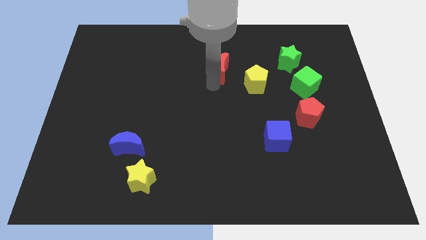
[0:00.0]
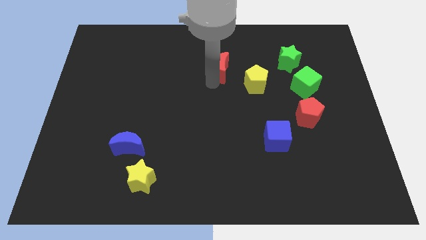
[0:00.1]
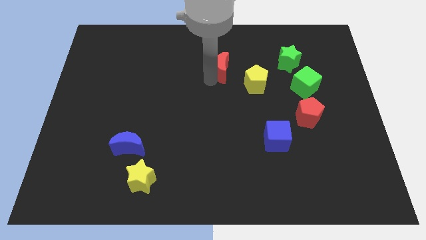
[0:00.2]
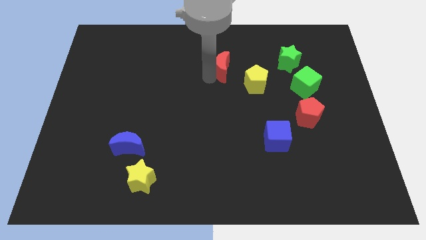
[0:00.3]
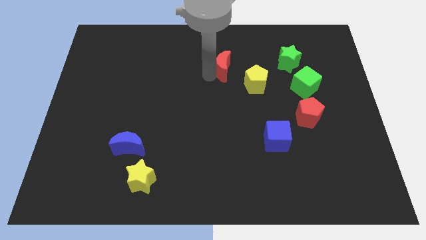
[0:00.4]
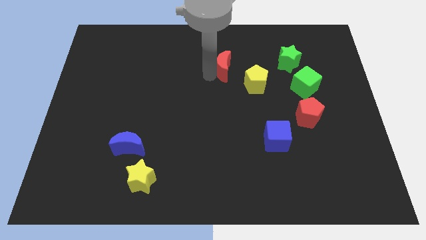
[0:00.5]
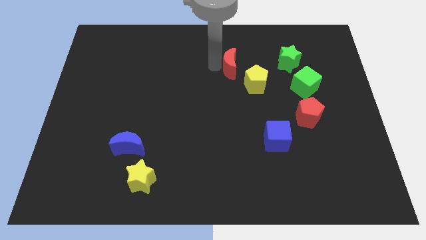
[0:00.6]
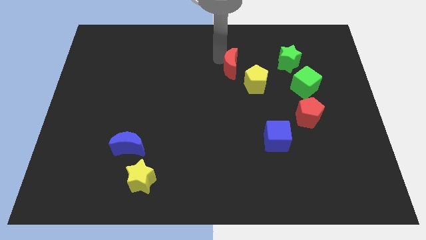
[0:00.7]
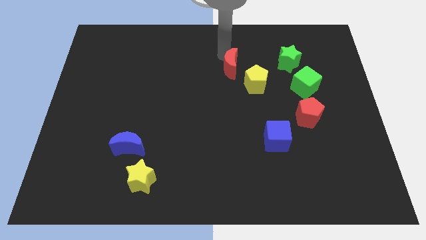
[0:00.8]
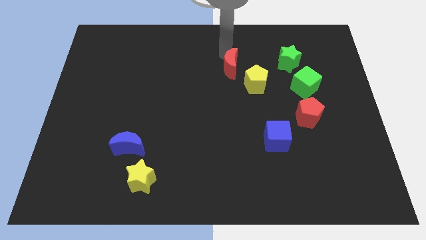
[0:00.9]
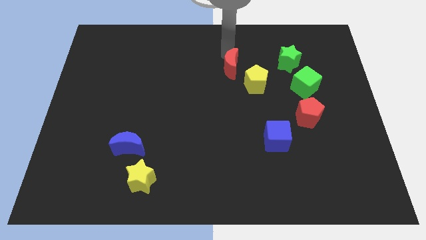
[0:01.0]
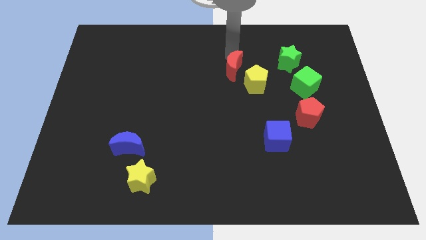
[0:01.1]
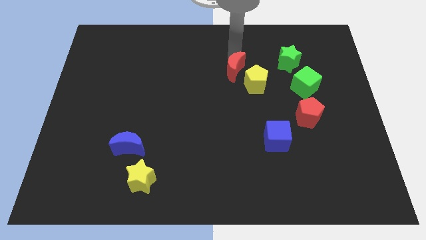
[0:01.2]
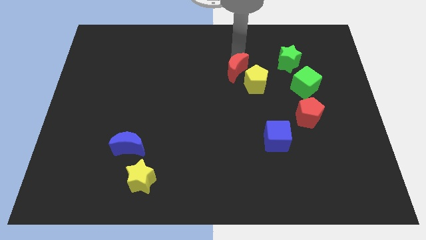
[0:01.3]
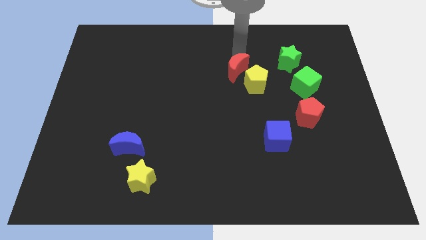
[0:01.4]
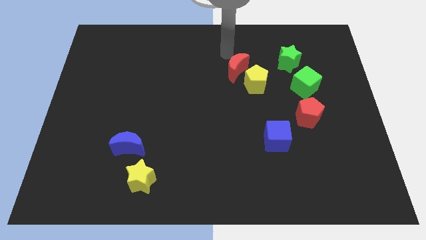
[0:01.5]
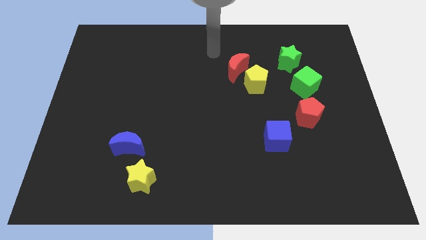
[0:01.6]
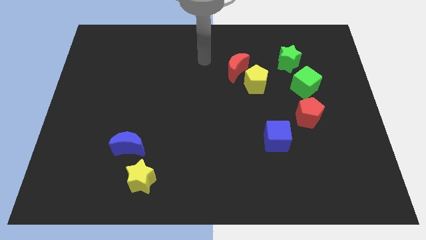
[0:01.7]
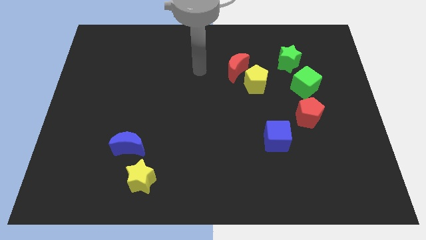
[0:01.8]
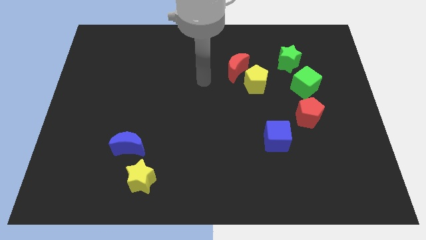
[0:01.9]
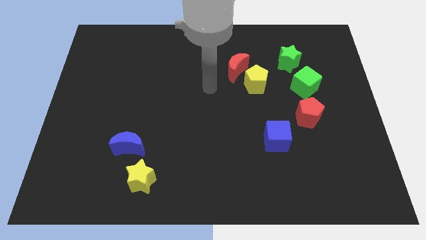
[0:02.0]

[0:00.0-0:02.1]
place the red moon diagonally top left to yellow pentagon

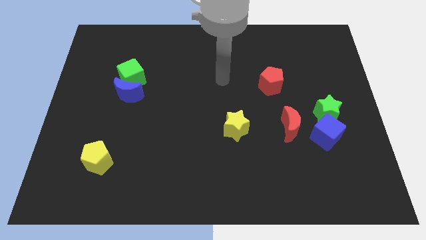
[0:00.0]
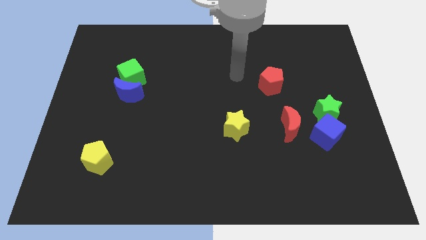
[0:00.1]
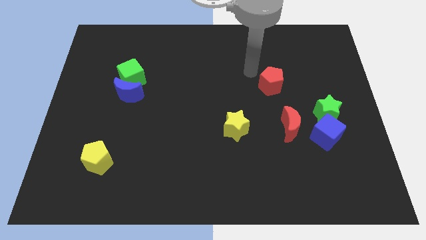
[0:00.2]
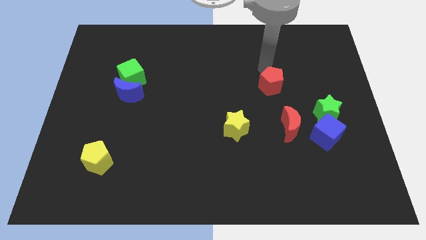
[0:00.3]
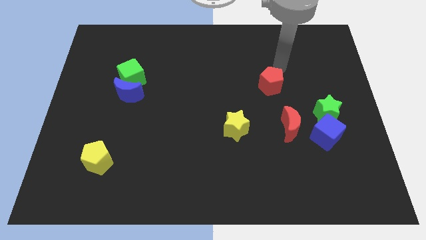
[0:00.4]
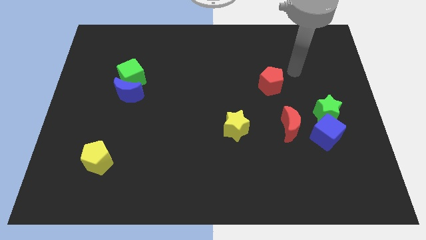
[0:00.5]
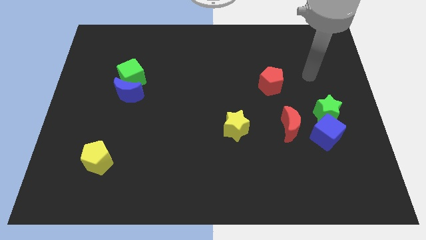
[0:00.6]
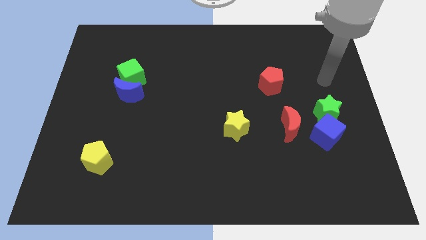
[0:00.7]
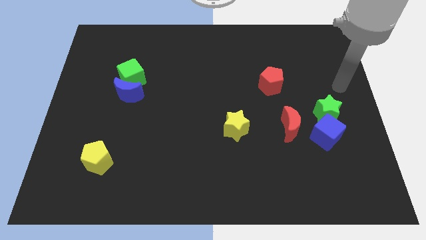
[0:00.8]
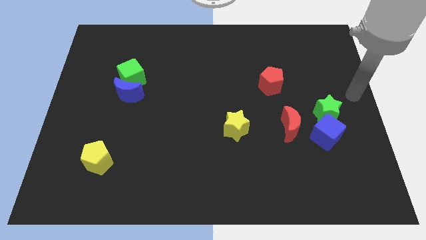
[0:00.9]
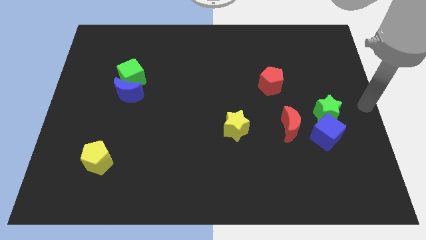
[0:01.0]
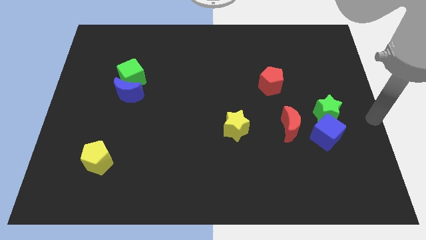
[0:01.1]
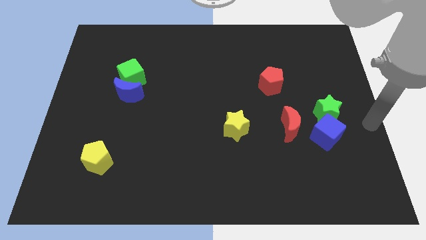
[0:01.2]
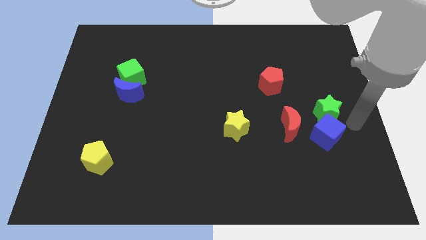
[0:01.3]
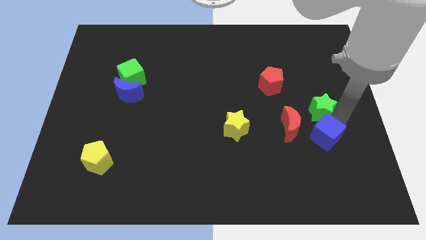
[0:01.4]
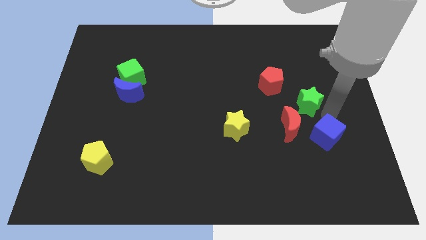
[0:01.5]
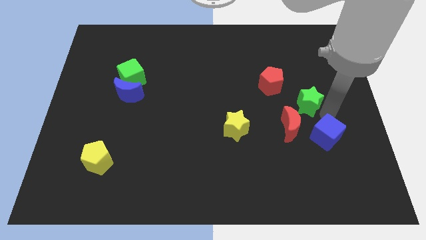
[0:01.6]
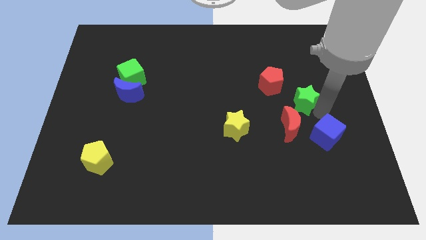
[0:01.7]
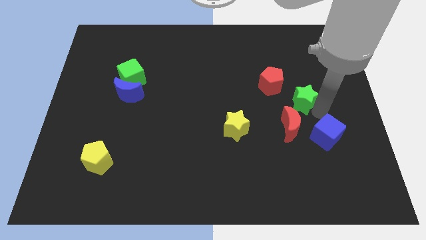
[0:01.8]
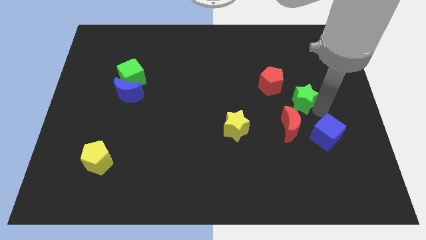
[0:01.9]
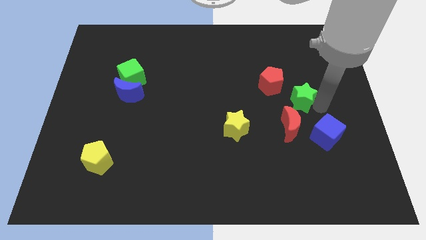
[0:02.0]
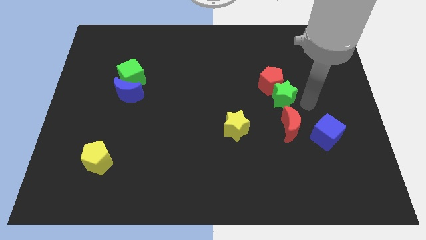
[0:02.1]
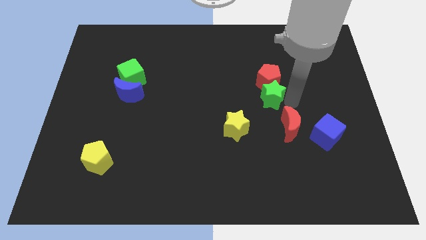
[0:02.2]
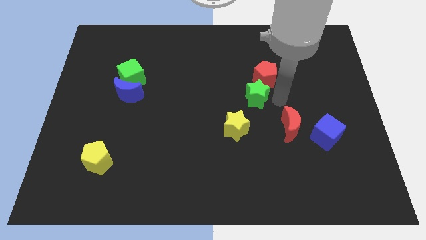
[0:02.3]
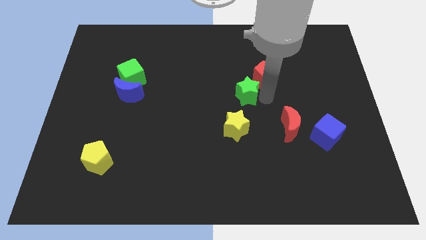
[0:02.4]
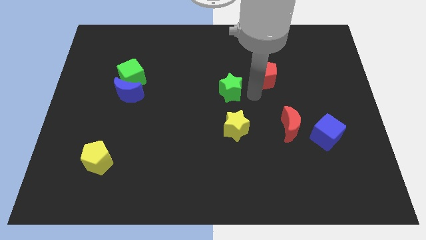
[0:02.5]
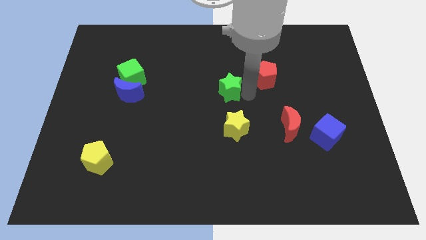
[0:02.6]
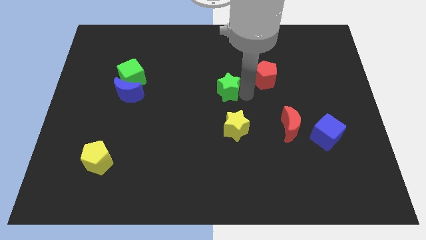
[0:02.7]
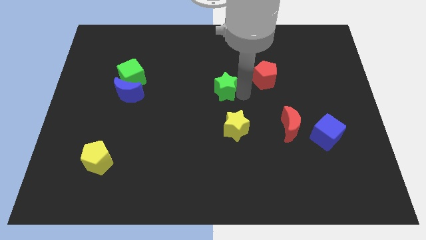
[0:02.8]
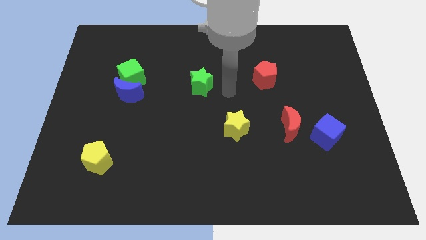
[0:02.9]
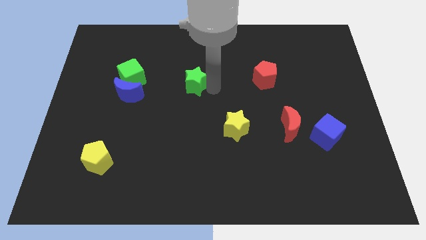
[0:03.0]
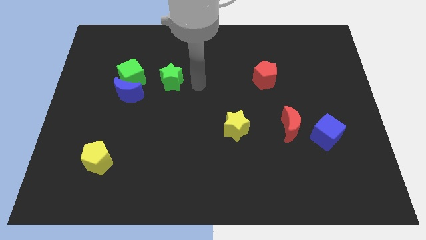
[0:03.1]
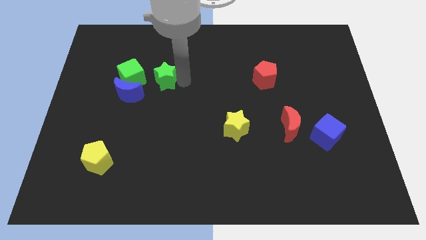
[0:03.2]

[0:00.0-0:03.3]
place the green star in between the green cube and red pentagon

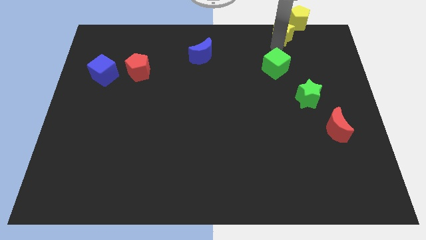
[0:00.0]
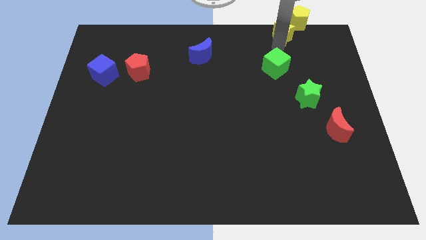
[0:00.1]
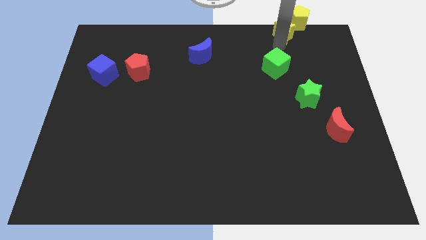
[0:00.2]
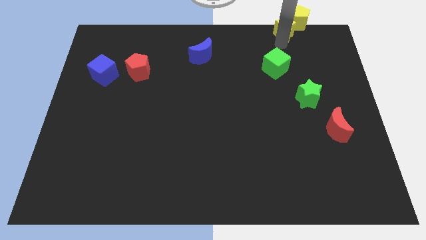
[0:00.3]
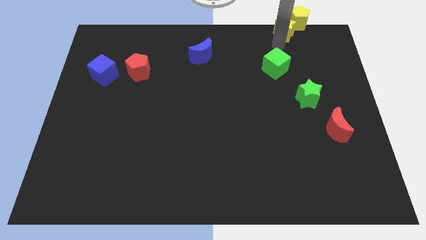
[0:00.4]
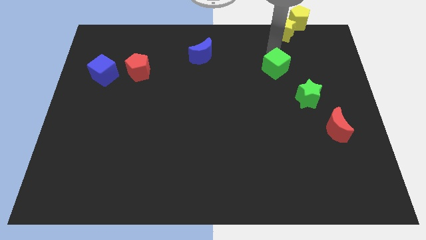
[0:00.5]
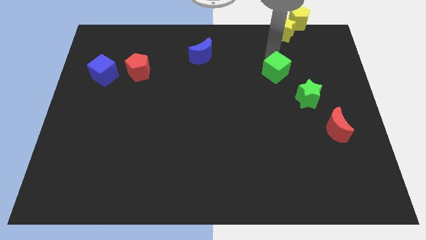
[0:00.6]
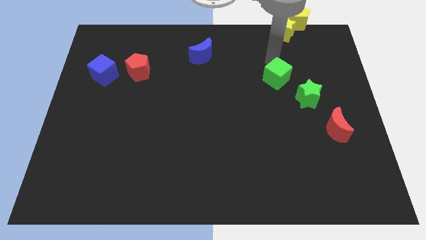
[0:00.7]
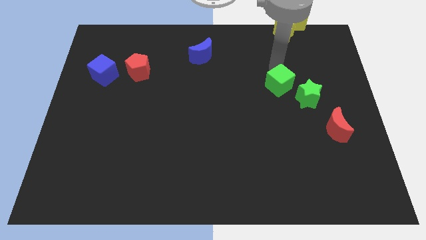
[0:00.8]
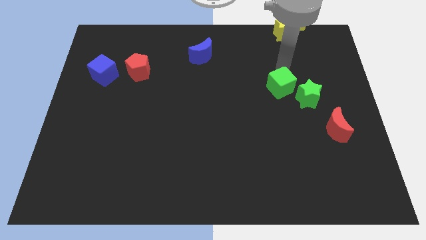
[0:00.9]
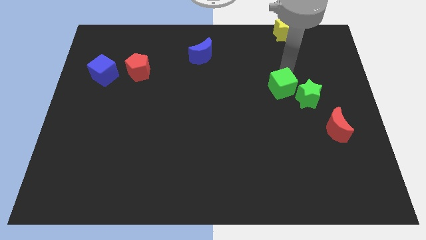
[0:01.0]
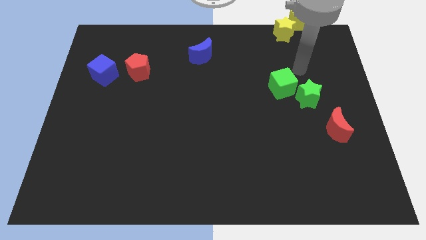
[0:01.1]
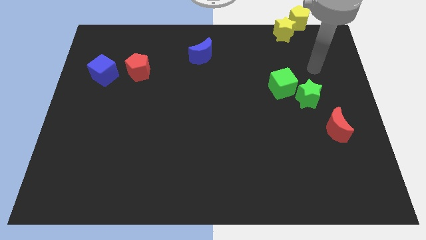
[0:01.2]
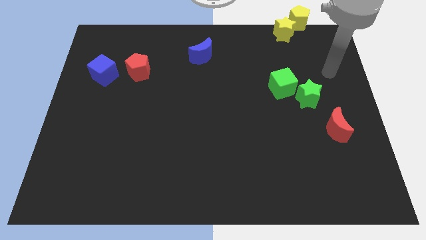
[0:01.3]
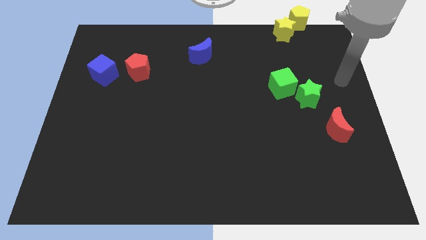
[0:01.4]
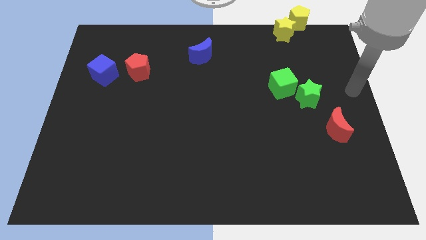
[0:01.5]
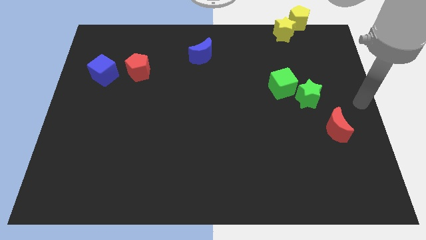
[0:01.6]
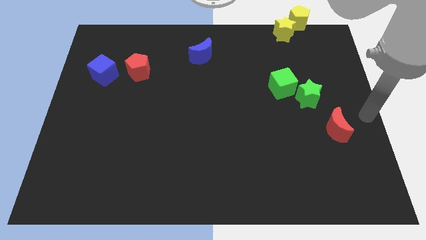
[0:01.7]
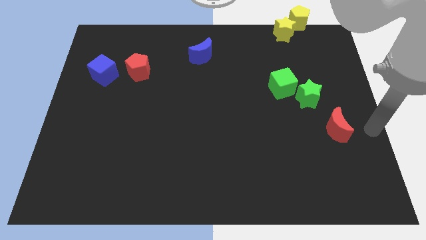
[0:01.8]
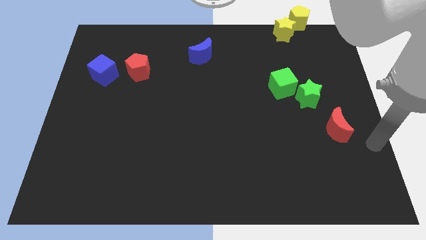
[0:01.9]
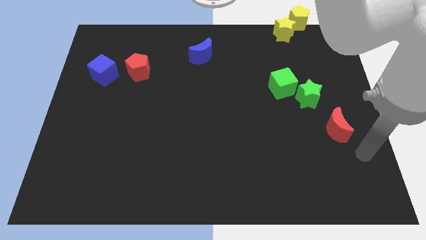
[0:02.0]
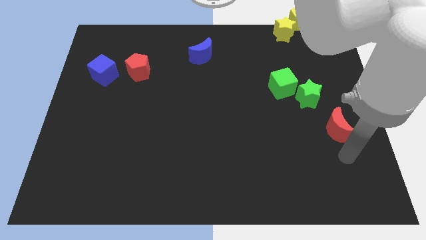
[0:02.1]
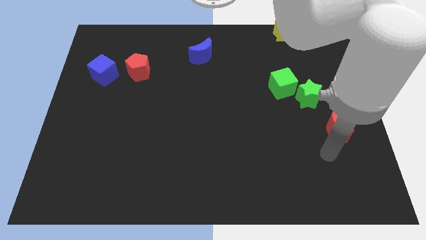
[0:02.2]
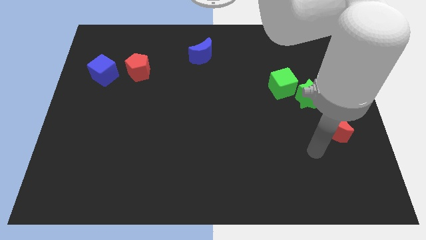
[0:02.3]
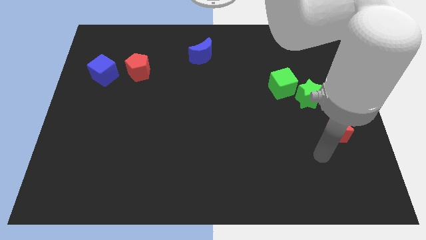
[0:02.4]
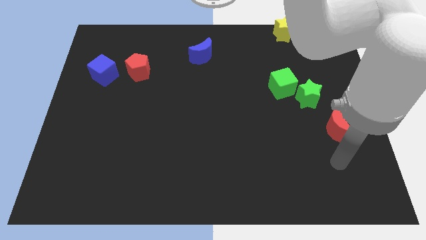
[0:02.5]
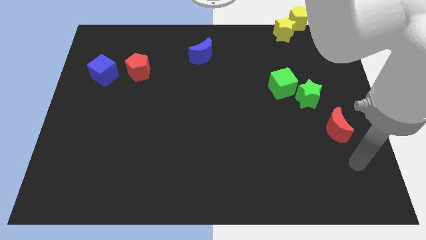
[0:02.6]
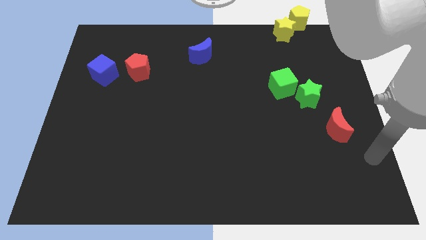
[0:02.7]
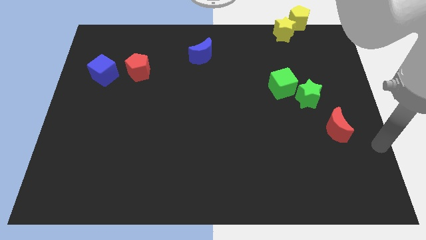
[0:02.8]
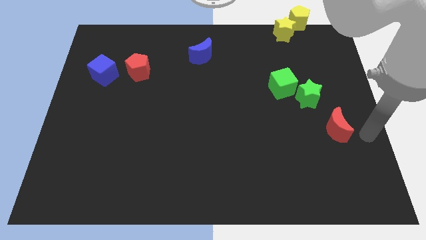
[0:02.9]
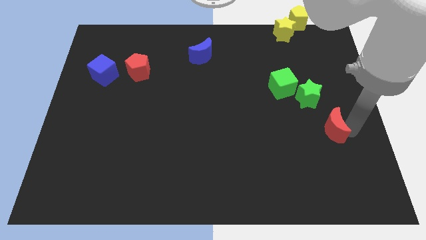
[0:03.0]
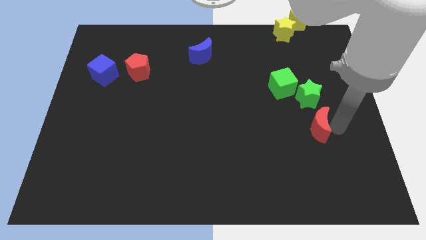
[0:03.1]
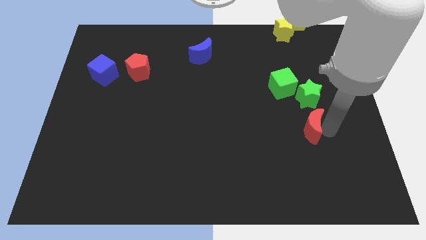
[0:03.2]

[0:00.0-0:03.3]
push the green cube to the left side of the green star

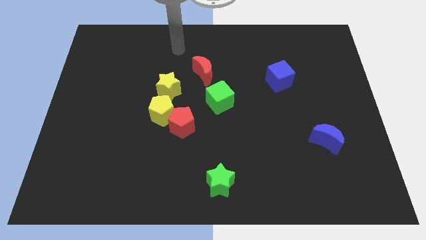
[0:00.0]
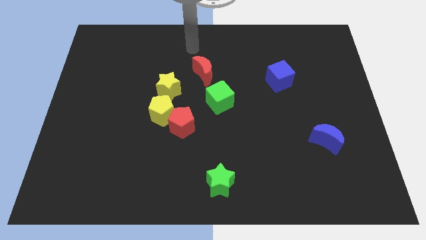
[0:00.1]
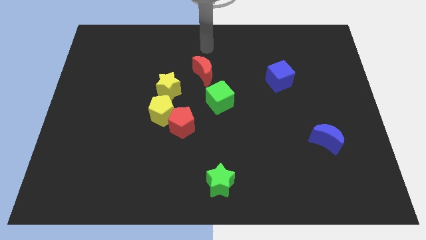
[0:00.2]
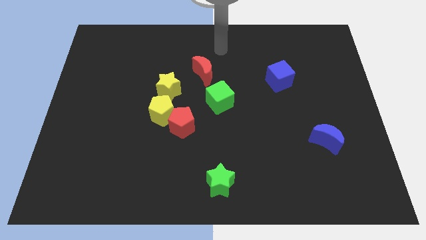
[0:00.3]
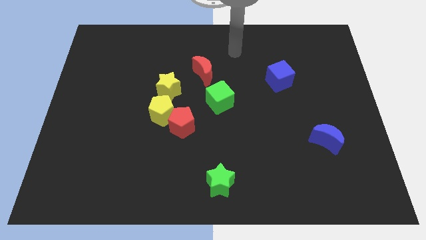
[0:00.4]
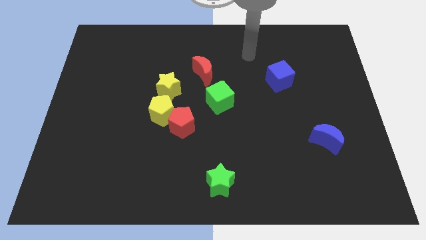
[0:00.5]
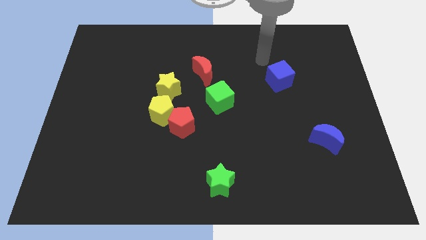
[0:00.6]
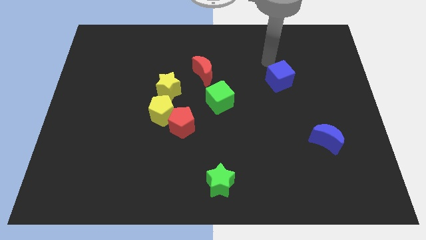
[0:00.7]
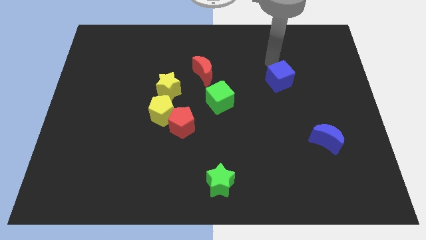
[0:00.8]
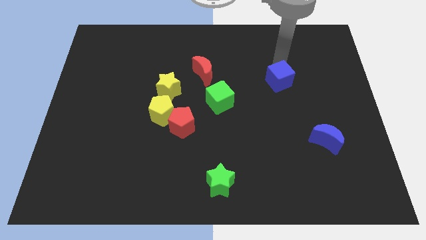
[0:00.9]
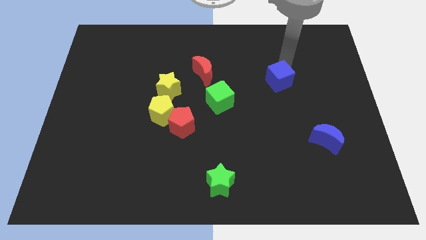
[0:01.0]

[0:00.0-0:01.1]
point your arm above the blue cube
